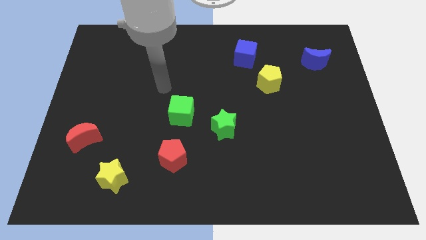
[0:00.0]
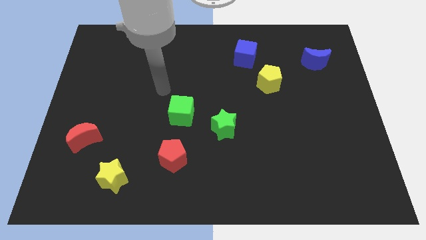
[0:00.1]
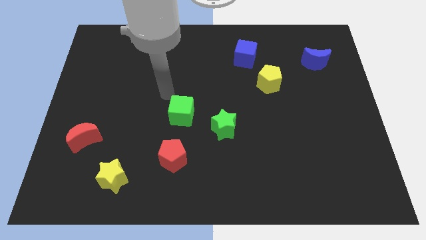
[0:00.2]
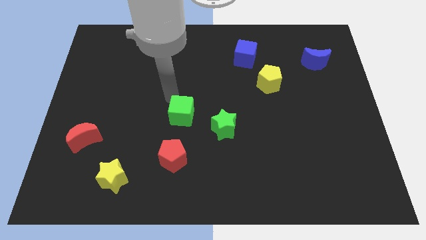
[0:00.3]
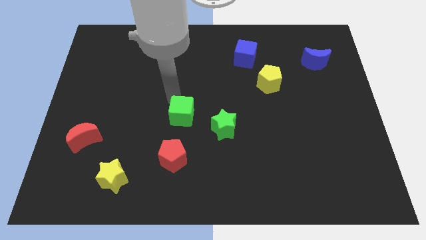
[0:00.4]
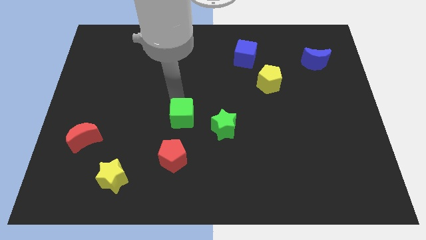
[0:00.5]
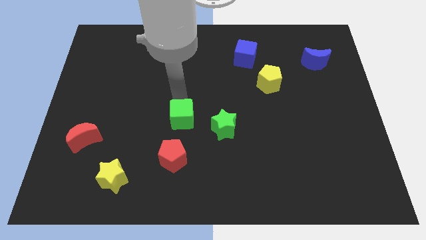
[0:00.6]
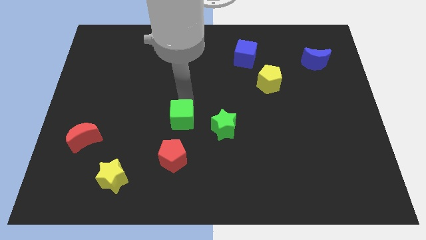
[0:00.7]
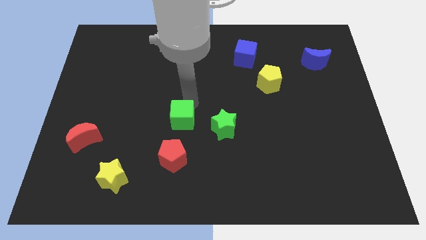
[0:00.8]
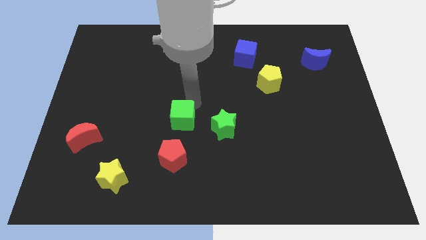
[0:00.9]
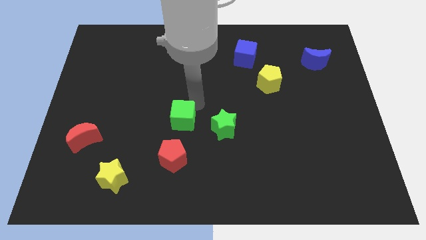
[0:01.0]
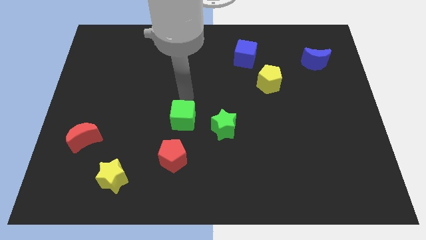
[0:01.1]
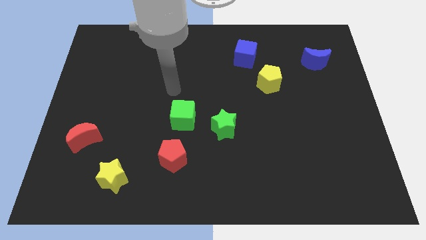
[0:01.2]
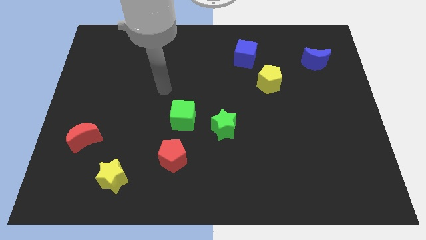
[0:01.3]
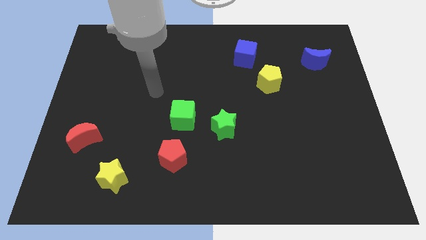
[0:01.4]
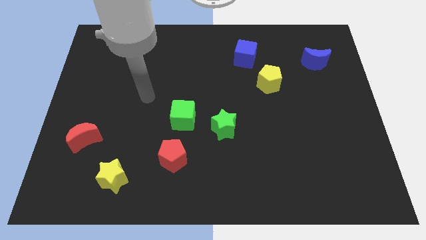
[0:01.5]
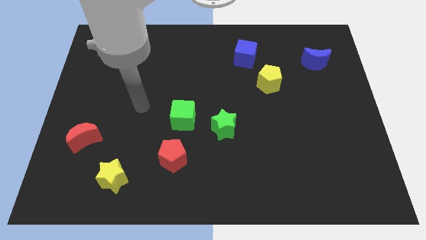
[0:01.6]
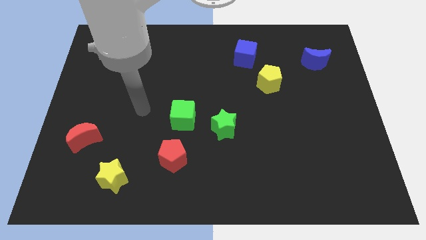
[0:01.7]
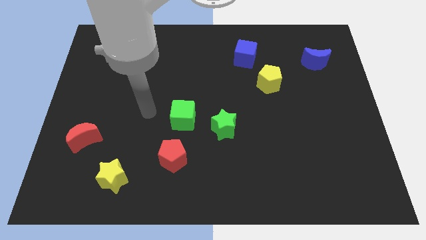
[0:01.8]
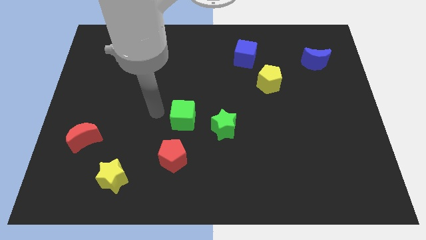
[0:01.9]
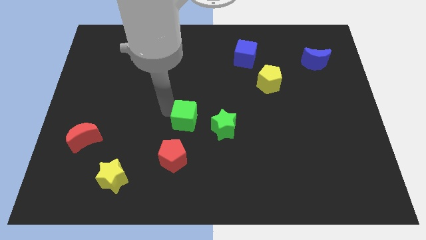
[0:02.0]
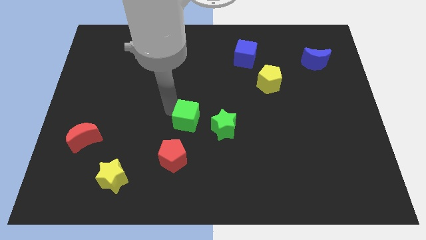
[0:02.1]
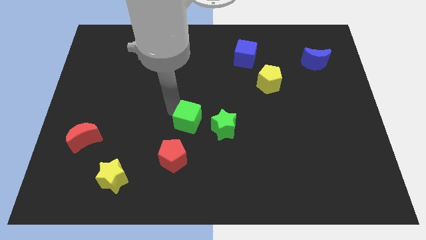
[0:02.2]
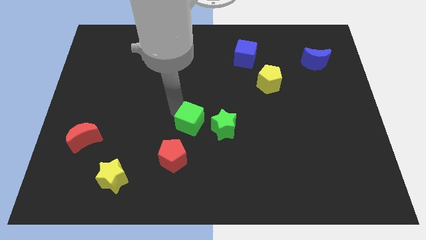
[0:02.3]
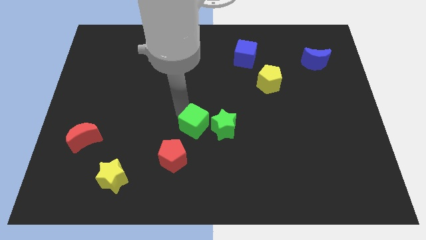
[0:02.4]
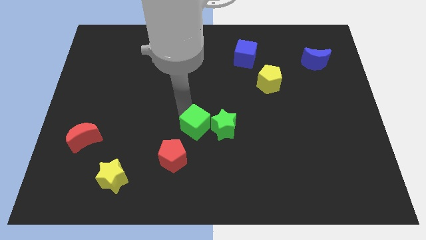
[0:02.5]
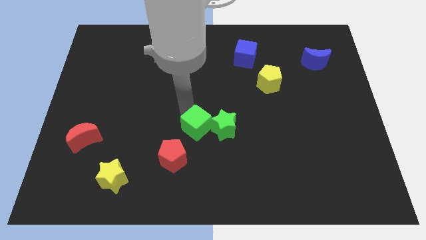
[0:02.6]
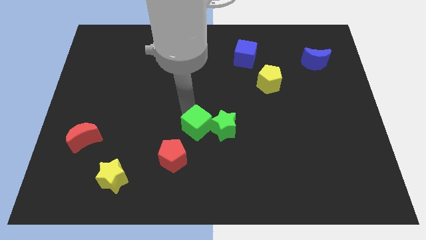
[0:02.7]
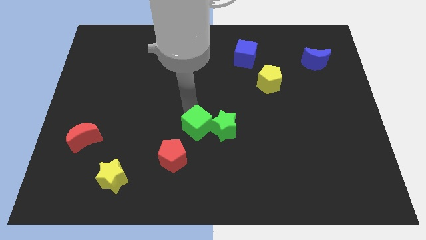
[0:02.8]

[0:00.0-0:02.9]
push green cube towards green star

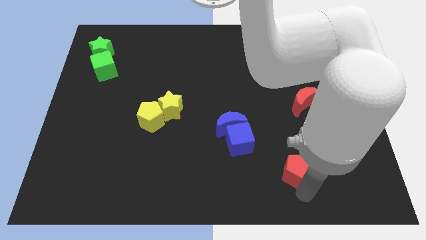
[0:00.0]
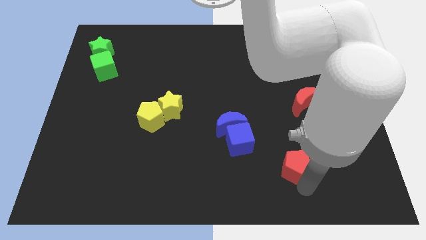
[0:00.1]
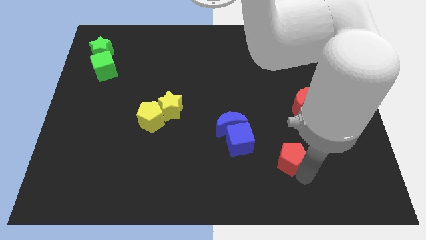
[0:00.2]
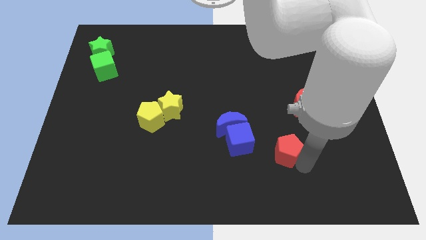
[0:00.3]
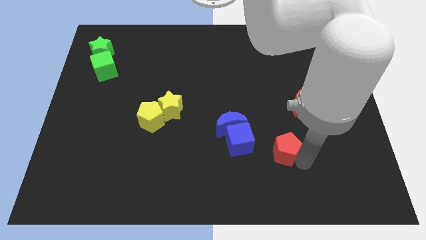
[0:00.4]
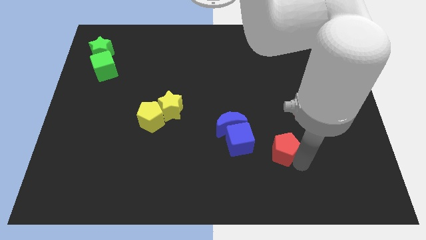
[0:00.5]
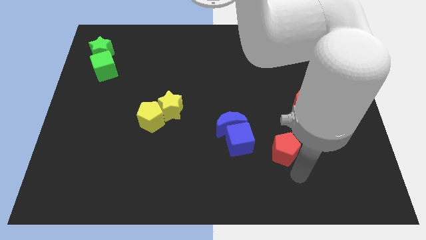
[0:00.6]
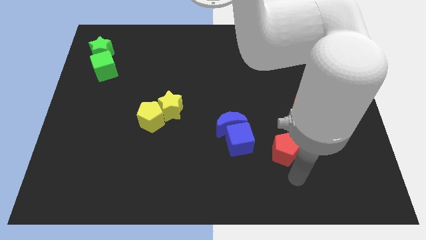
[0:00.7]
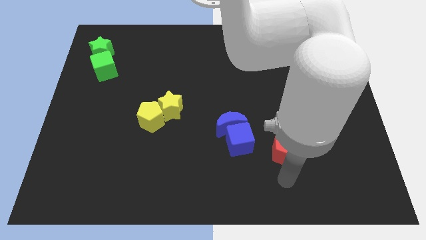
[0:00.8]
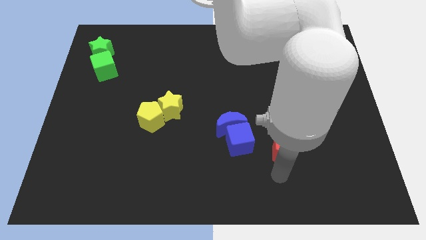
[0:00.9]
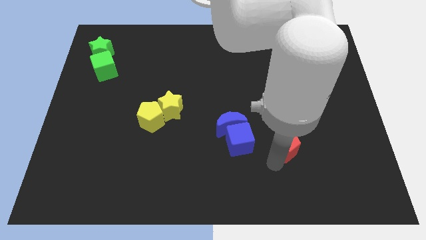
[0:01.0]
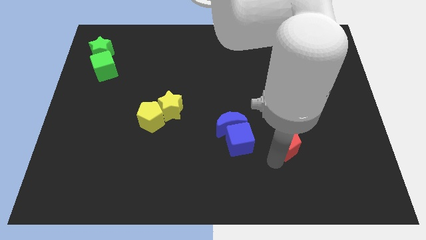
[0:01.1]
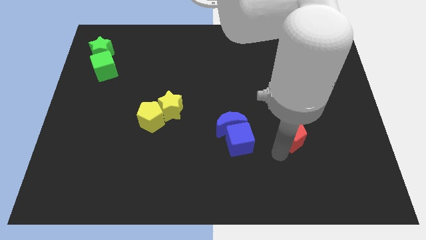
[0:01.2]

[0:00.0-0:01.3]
place the red pentagon parallel to blue cube

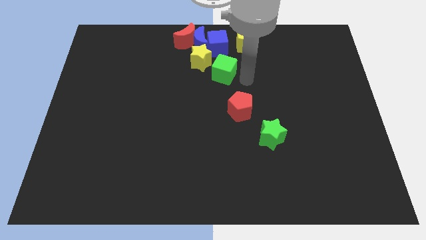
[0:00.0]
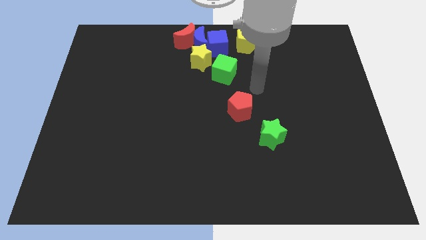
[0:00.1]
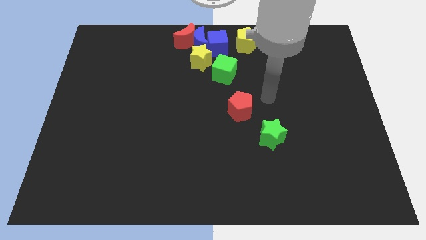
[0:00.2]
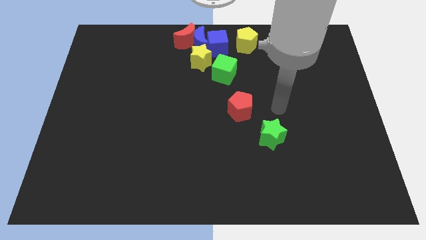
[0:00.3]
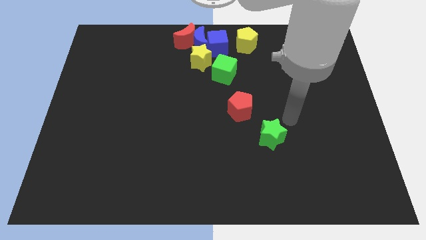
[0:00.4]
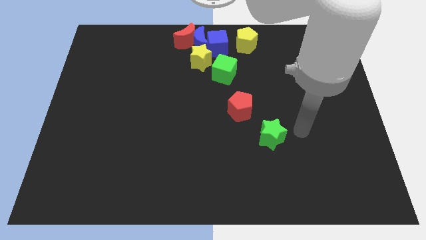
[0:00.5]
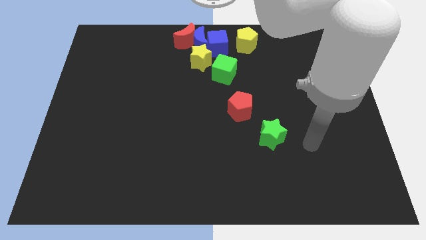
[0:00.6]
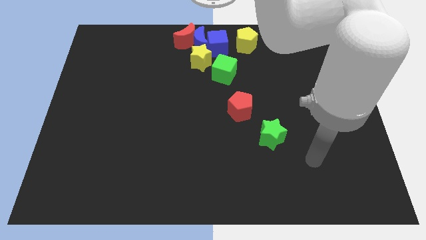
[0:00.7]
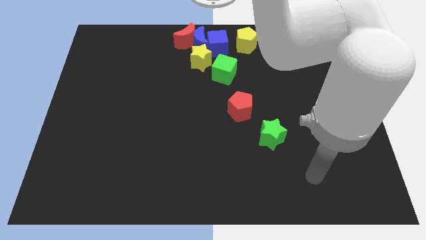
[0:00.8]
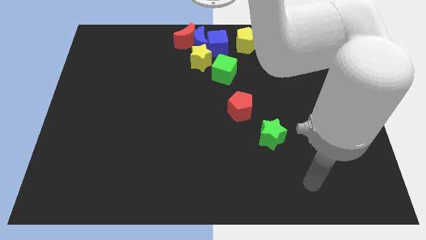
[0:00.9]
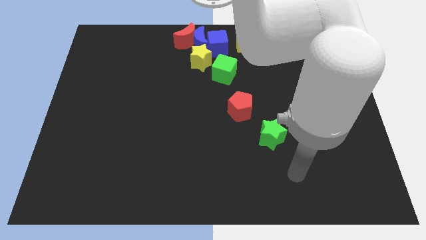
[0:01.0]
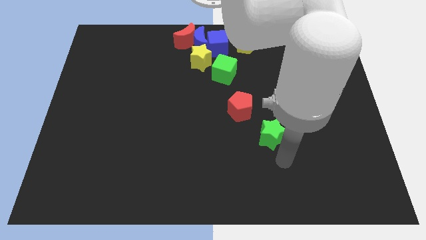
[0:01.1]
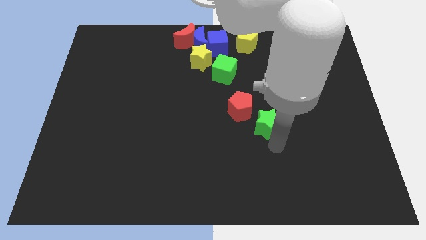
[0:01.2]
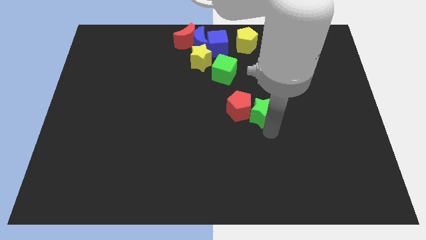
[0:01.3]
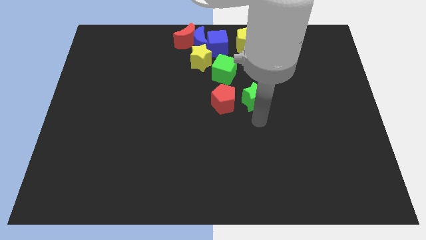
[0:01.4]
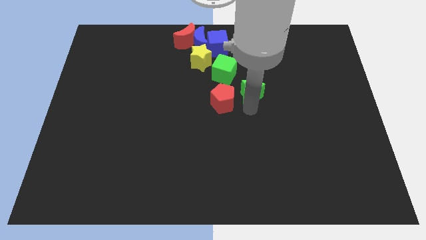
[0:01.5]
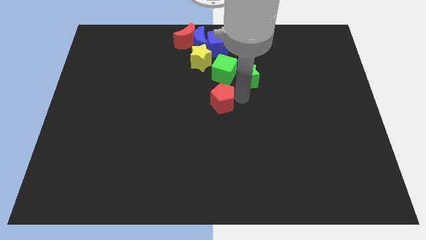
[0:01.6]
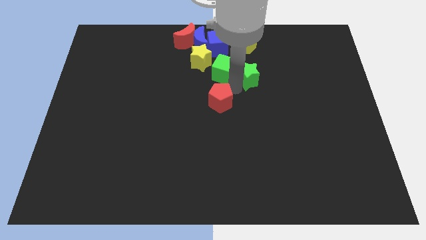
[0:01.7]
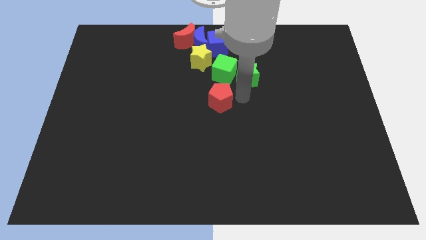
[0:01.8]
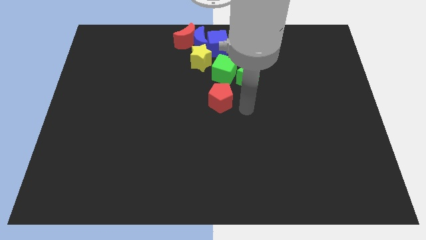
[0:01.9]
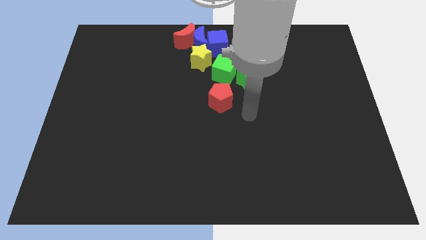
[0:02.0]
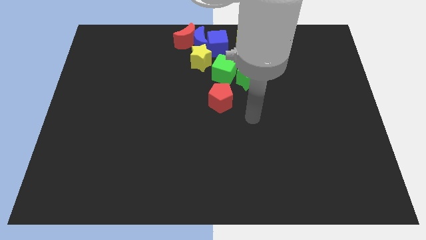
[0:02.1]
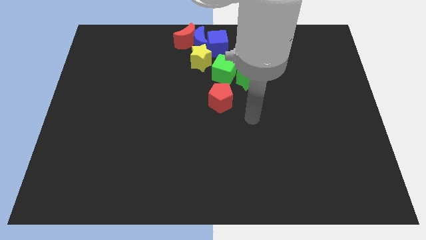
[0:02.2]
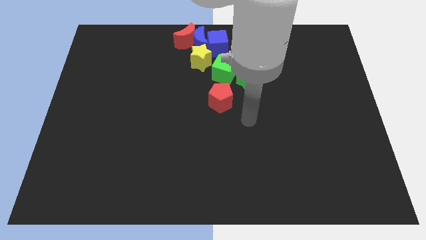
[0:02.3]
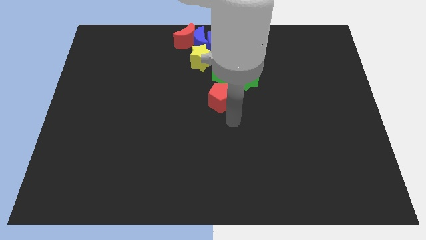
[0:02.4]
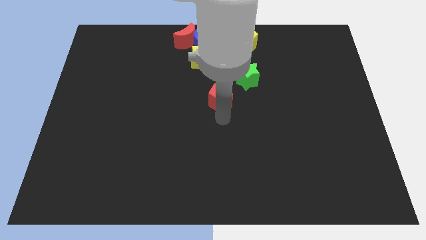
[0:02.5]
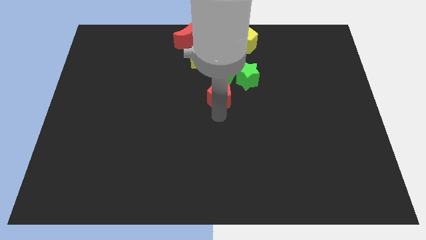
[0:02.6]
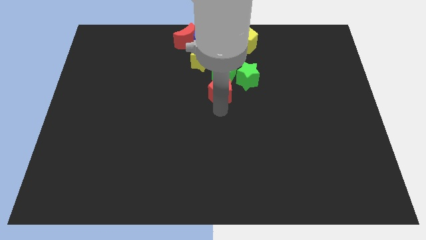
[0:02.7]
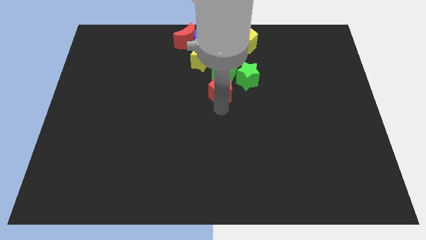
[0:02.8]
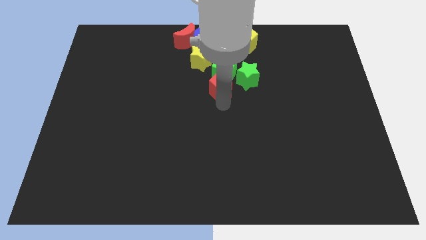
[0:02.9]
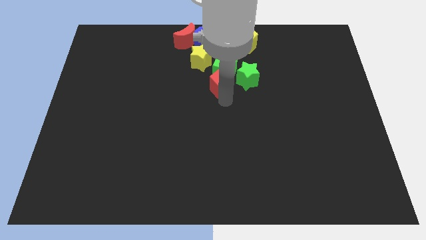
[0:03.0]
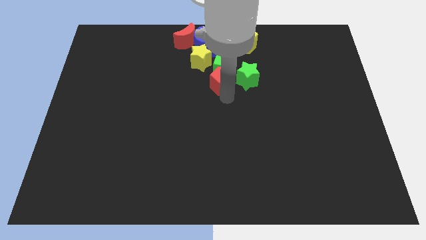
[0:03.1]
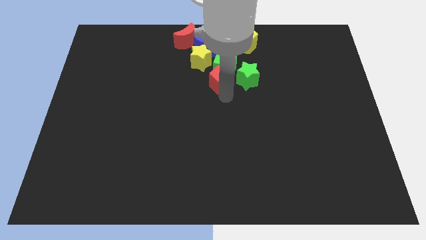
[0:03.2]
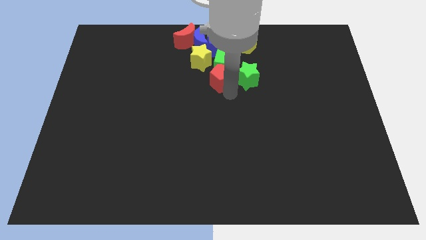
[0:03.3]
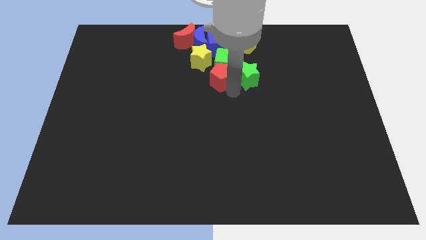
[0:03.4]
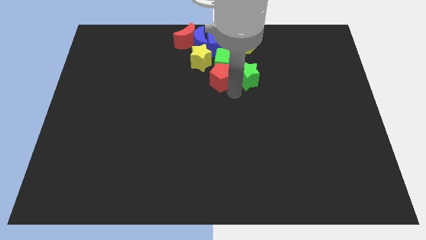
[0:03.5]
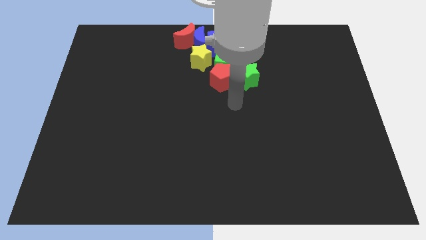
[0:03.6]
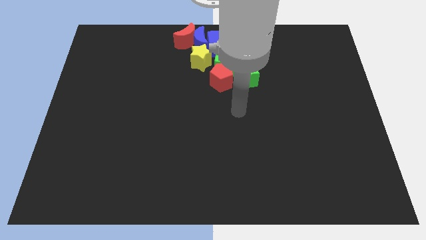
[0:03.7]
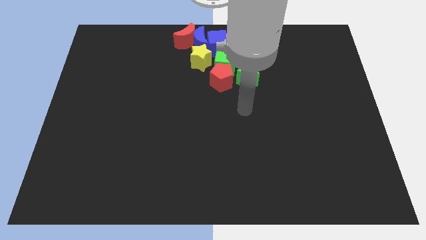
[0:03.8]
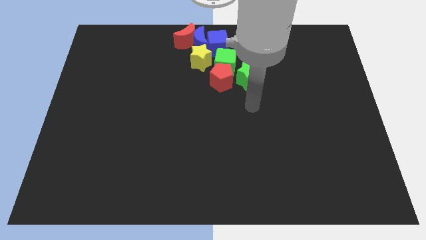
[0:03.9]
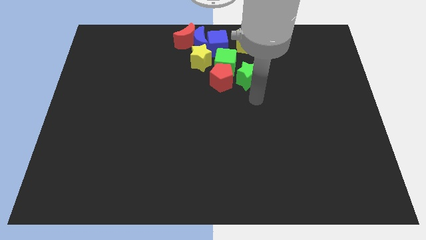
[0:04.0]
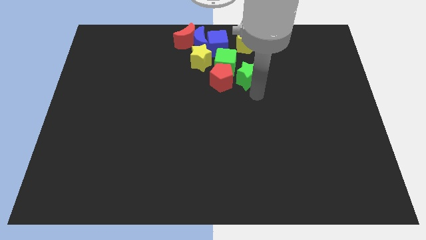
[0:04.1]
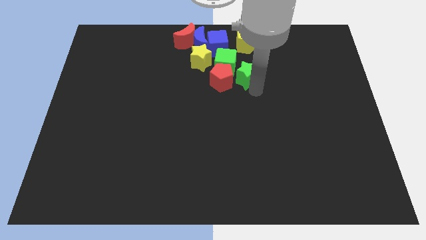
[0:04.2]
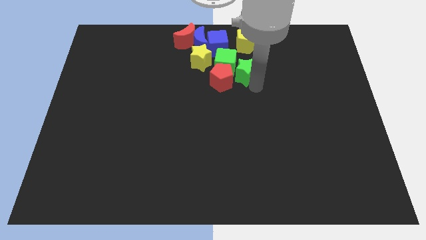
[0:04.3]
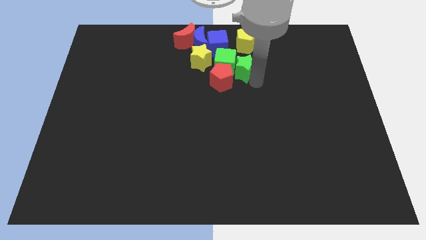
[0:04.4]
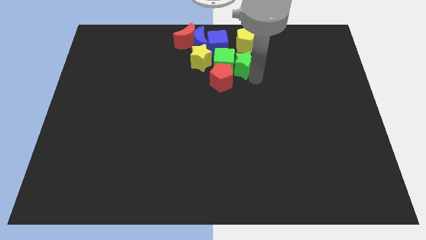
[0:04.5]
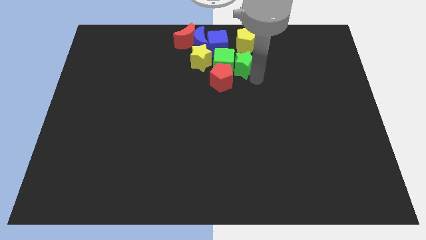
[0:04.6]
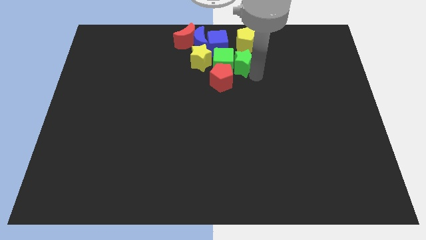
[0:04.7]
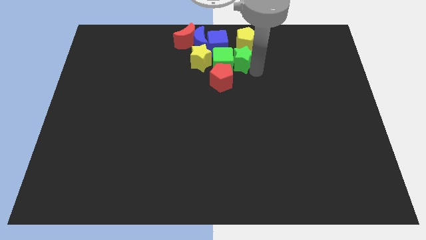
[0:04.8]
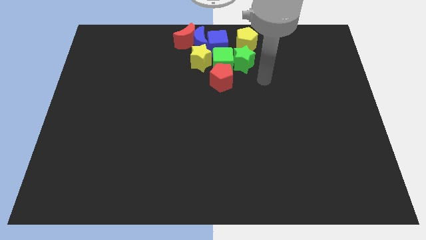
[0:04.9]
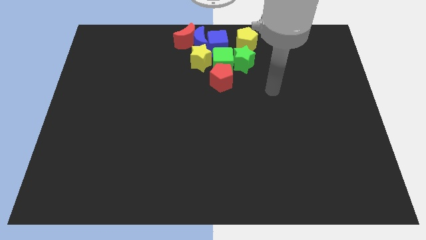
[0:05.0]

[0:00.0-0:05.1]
move the green star and red pentagon into the group of blocks
